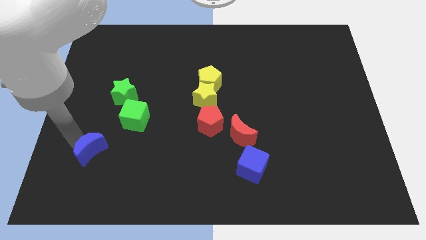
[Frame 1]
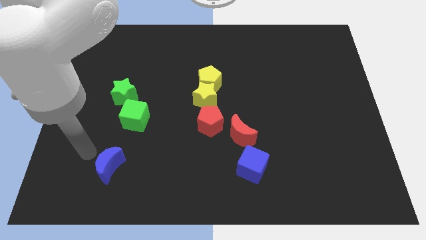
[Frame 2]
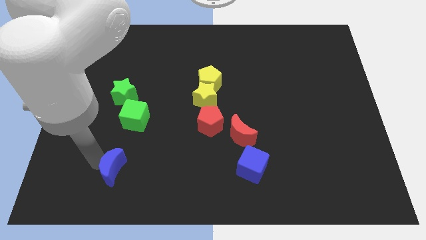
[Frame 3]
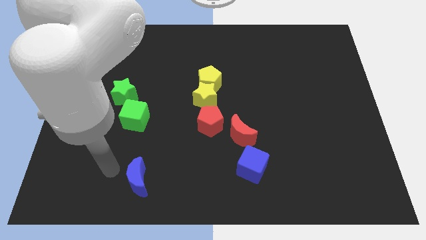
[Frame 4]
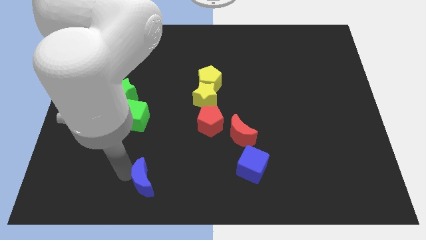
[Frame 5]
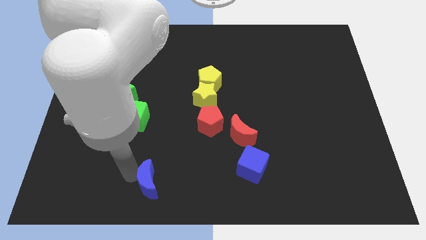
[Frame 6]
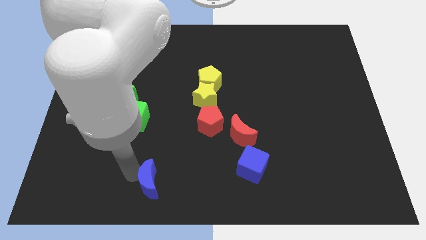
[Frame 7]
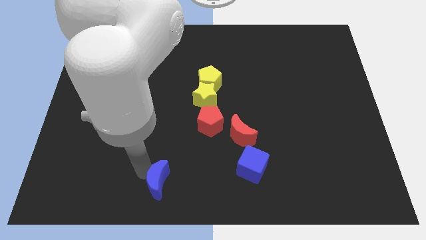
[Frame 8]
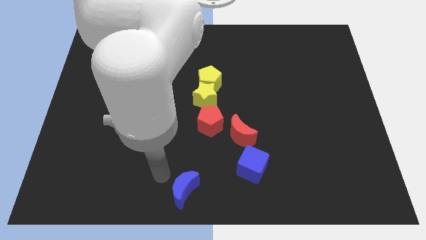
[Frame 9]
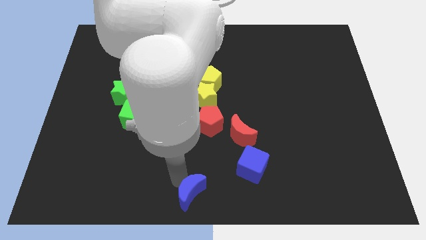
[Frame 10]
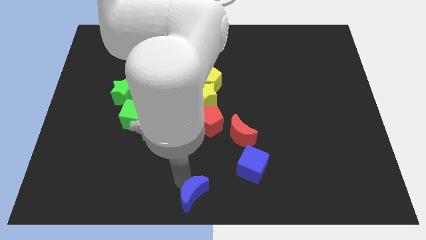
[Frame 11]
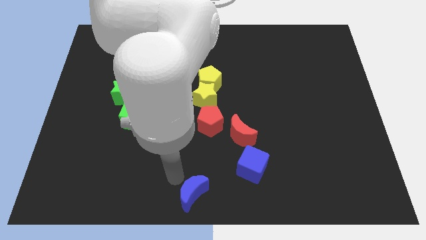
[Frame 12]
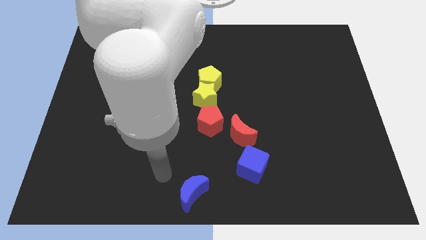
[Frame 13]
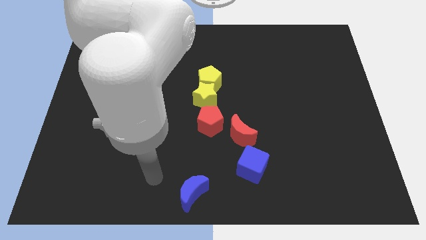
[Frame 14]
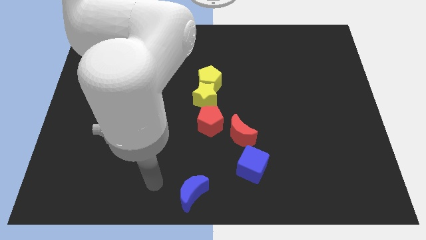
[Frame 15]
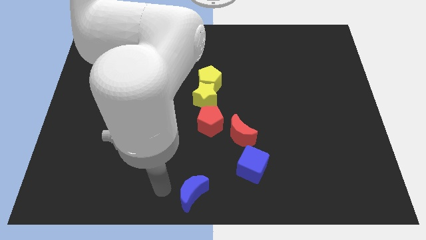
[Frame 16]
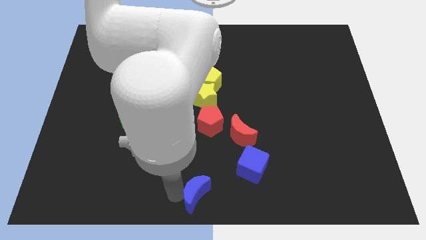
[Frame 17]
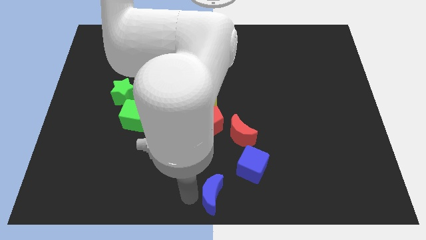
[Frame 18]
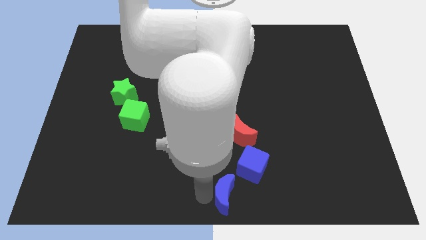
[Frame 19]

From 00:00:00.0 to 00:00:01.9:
place blue moon at the bottom of red pentagon

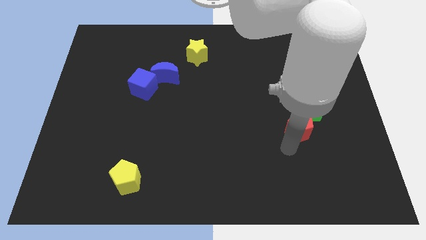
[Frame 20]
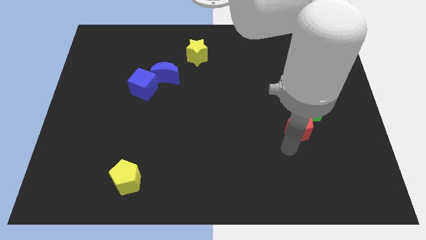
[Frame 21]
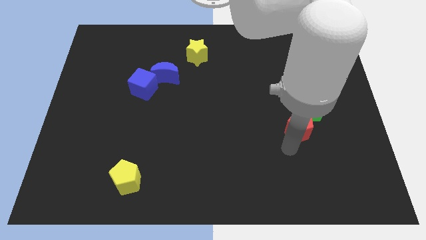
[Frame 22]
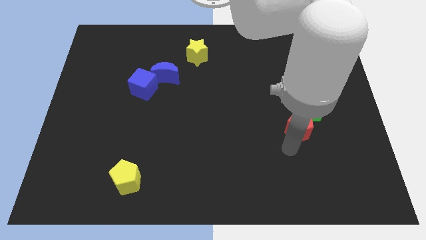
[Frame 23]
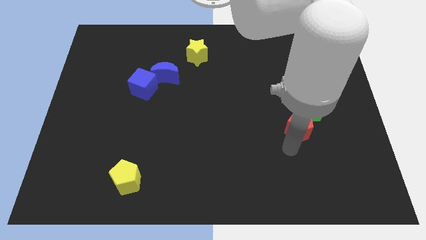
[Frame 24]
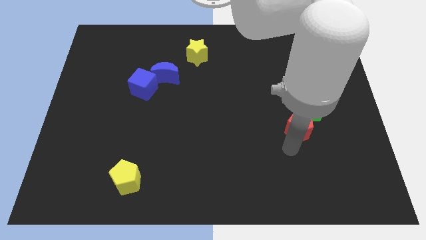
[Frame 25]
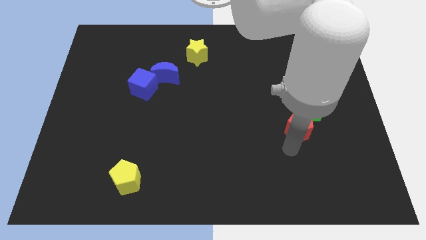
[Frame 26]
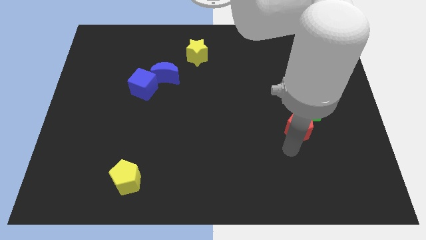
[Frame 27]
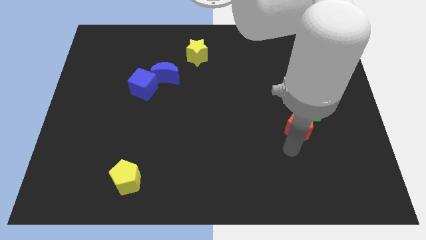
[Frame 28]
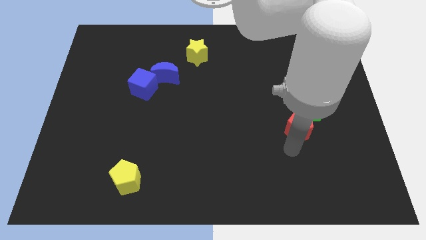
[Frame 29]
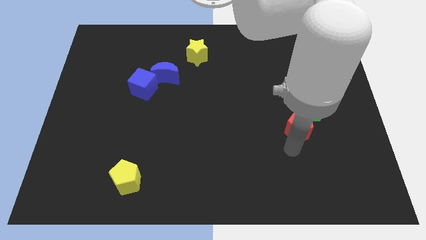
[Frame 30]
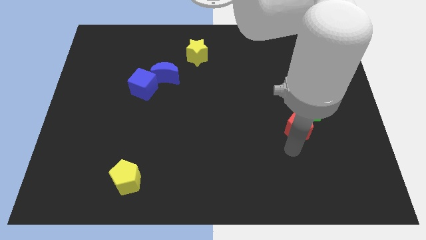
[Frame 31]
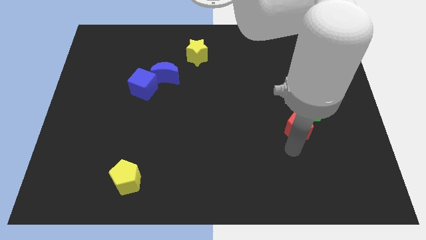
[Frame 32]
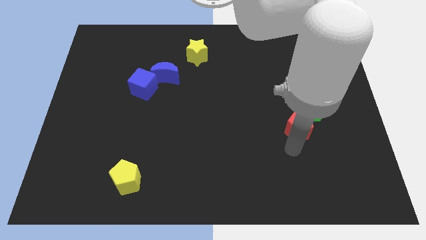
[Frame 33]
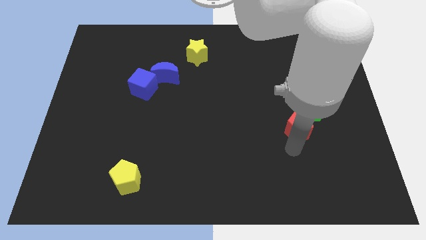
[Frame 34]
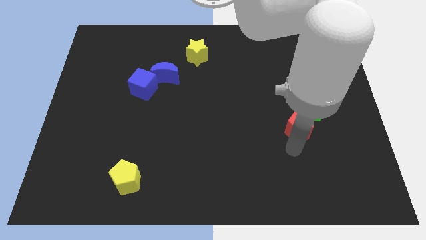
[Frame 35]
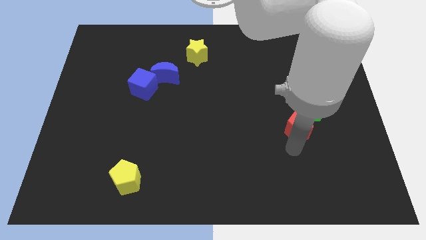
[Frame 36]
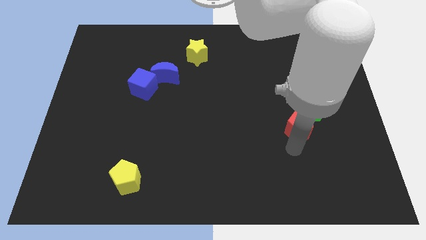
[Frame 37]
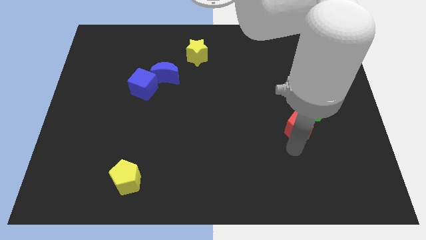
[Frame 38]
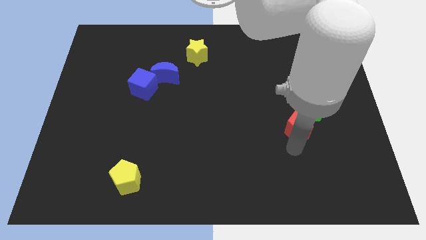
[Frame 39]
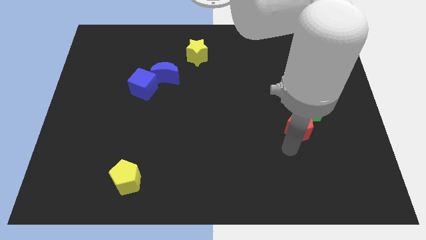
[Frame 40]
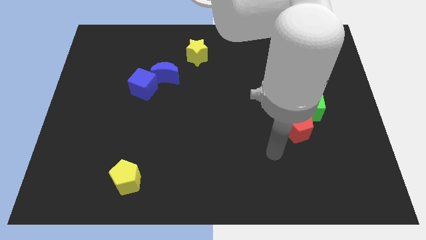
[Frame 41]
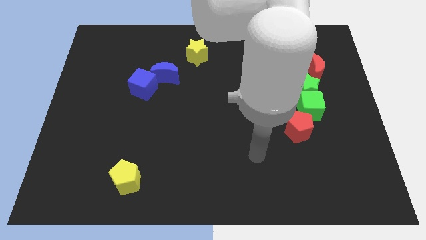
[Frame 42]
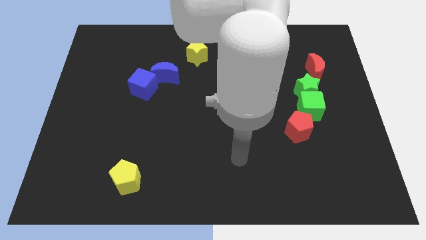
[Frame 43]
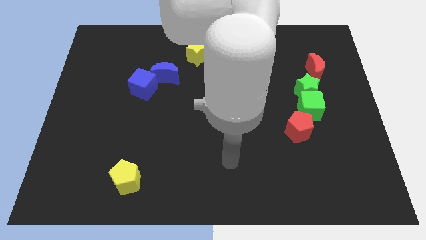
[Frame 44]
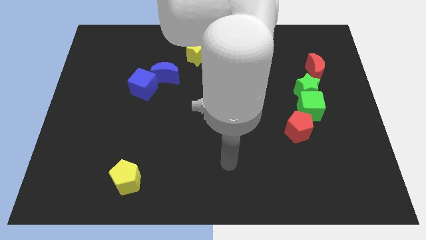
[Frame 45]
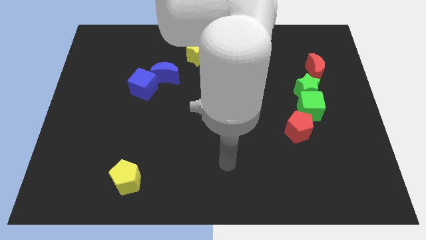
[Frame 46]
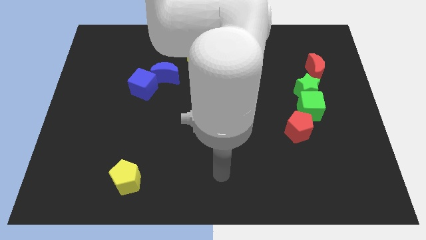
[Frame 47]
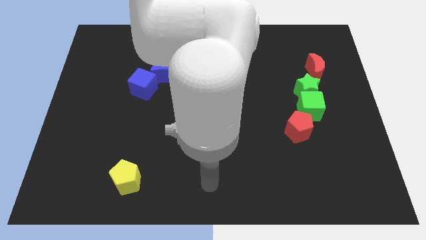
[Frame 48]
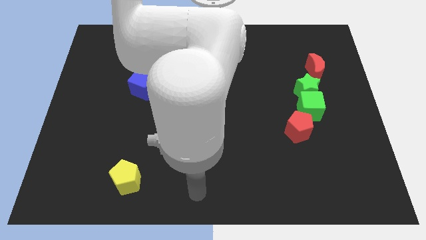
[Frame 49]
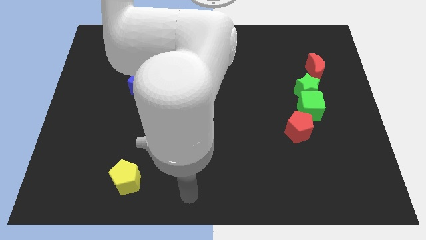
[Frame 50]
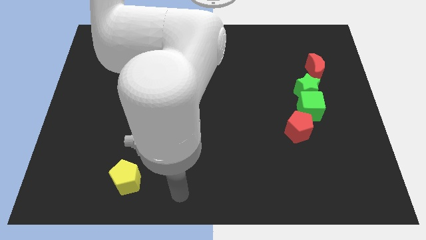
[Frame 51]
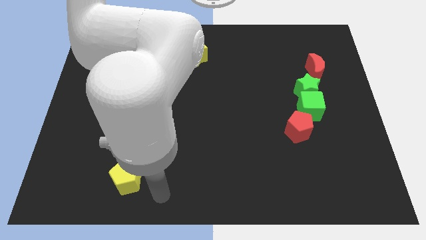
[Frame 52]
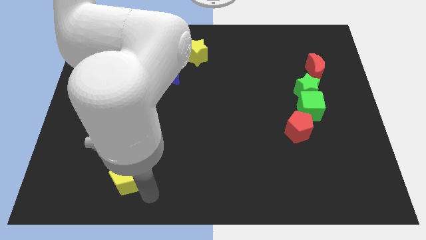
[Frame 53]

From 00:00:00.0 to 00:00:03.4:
move your arm from red pentagon

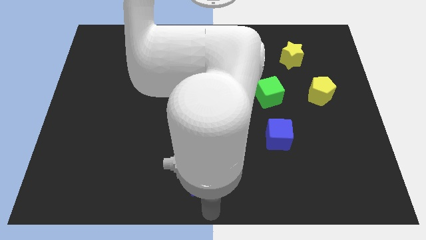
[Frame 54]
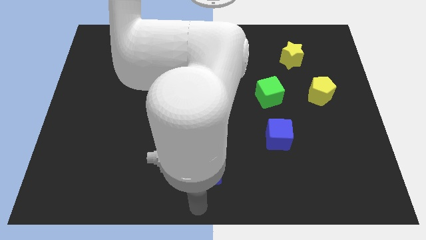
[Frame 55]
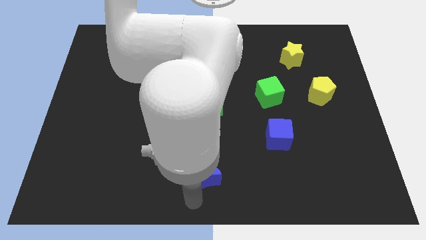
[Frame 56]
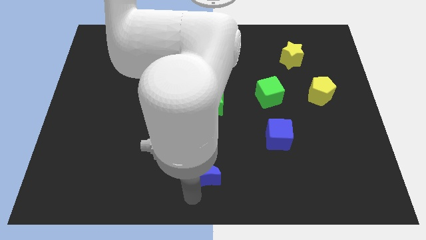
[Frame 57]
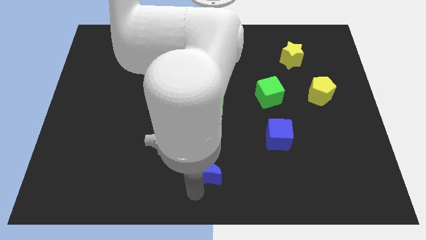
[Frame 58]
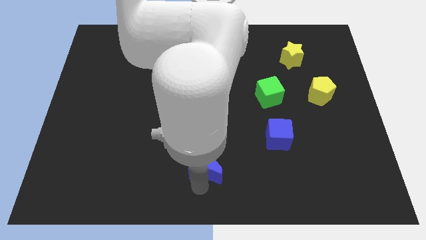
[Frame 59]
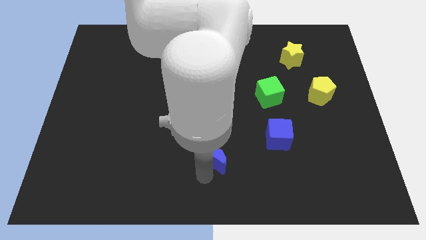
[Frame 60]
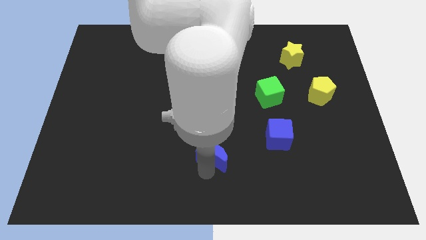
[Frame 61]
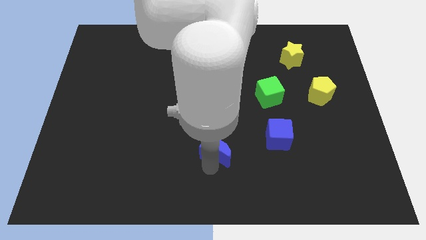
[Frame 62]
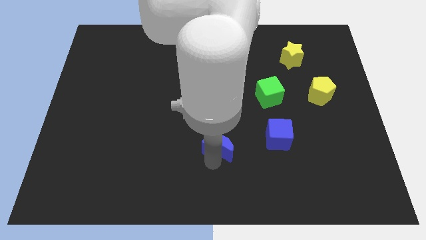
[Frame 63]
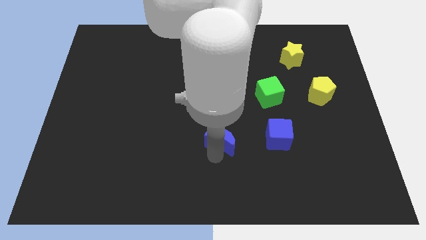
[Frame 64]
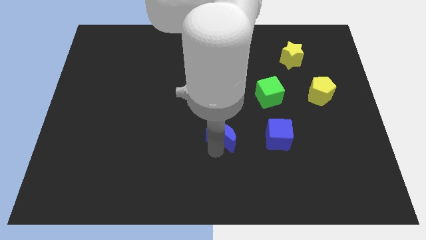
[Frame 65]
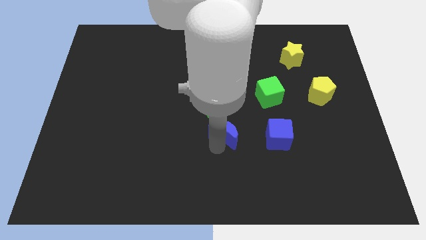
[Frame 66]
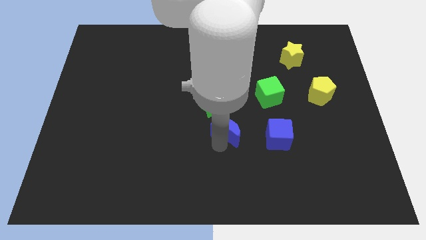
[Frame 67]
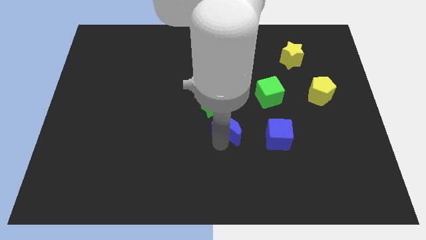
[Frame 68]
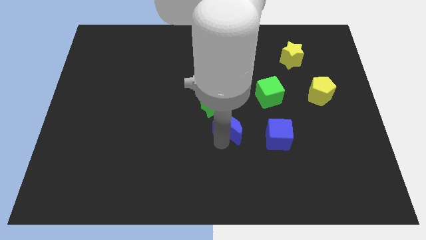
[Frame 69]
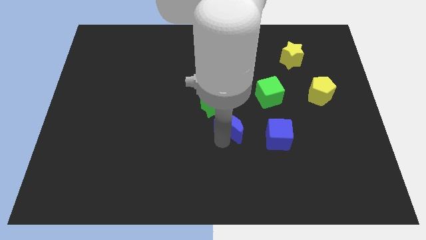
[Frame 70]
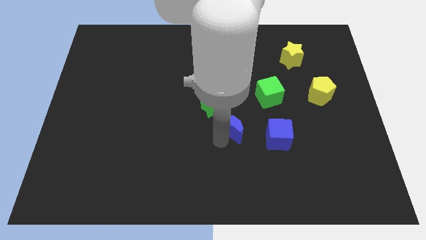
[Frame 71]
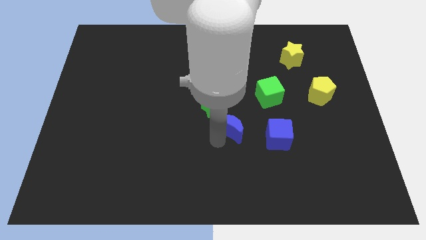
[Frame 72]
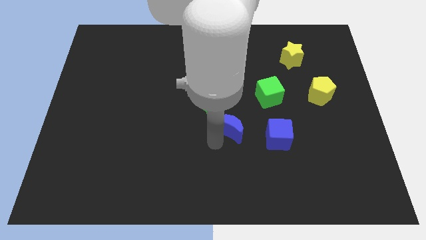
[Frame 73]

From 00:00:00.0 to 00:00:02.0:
move the blue crescent to the center

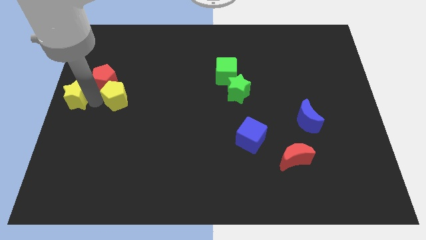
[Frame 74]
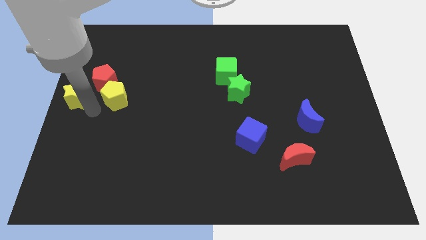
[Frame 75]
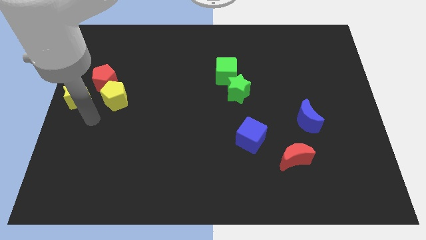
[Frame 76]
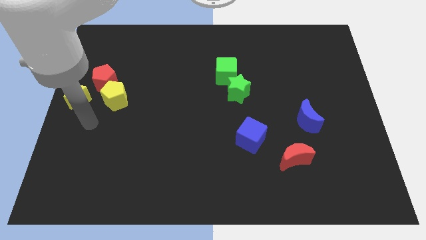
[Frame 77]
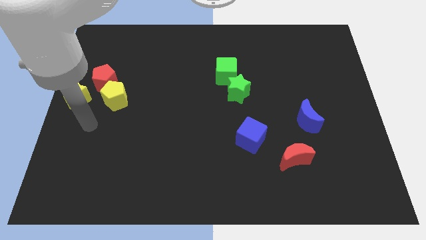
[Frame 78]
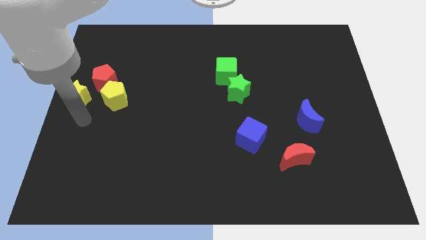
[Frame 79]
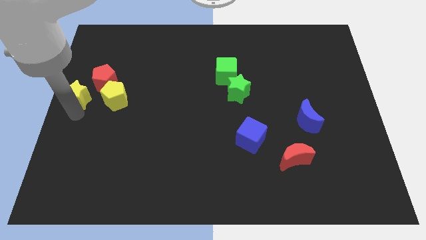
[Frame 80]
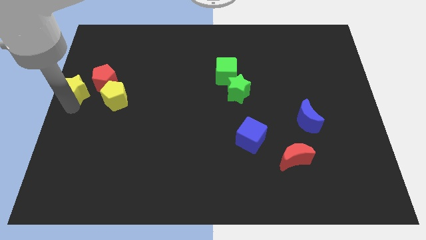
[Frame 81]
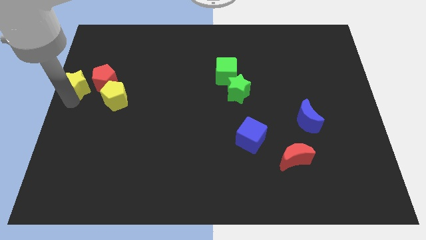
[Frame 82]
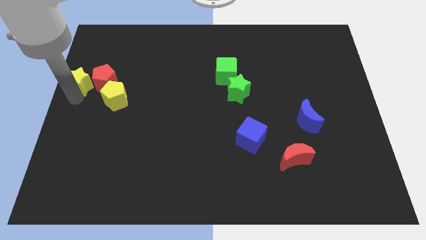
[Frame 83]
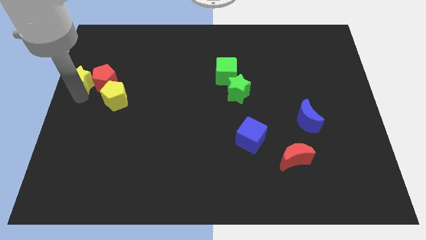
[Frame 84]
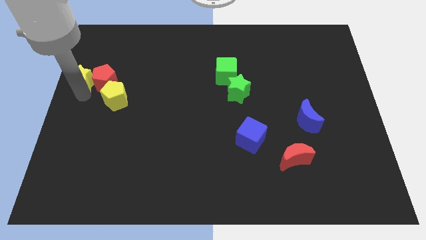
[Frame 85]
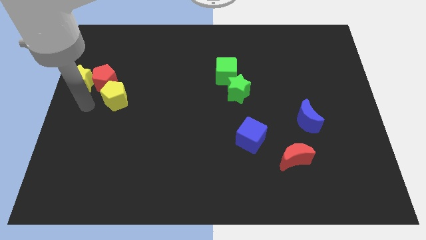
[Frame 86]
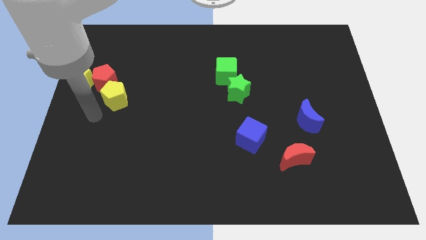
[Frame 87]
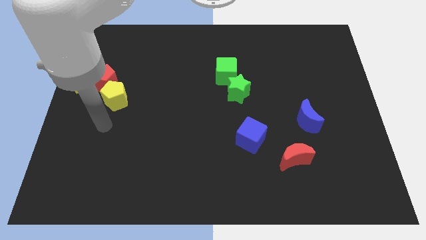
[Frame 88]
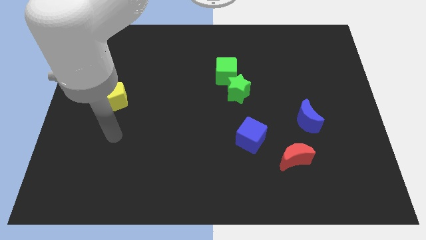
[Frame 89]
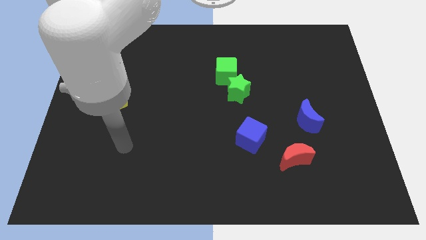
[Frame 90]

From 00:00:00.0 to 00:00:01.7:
move your arm down to the right

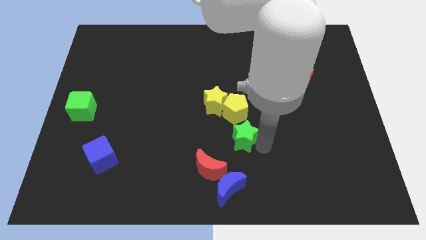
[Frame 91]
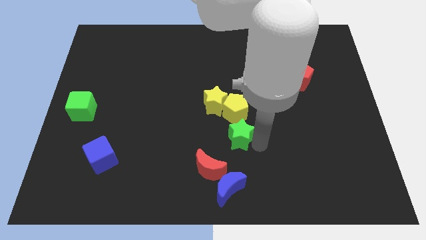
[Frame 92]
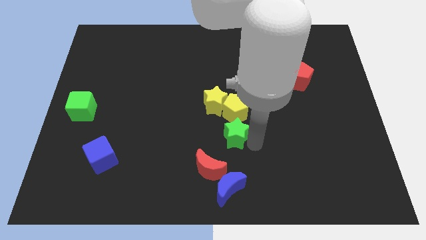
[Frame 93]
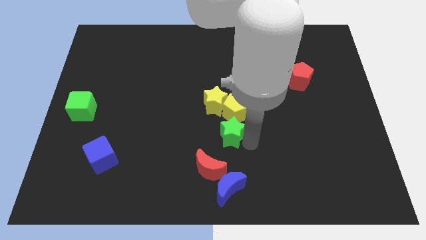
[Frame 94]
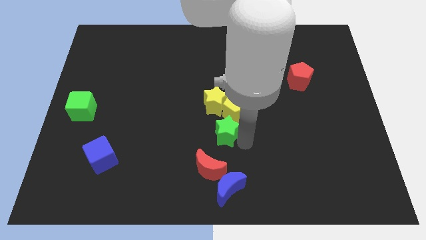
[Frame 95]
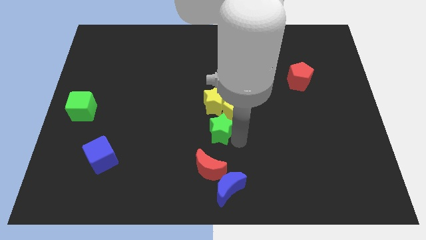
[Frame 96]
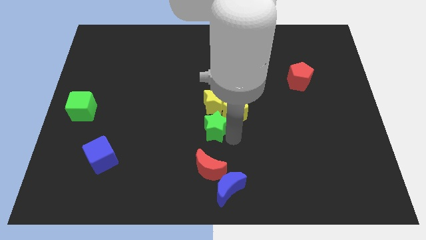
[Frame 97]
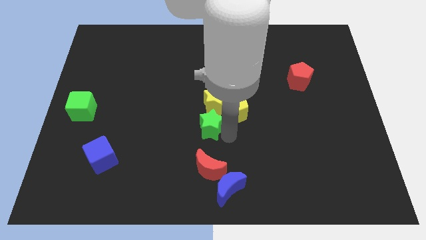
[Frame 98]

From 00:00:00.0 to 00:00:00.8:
place the green star below the yellow blocks
